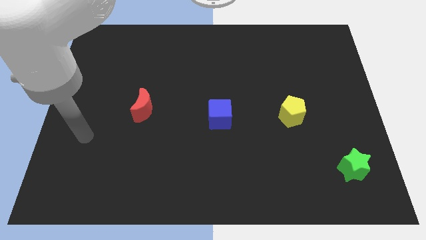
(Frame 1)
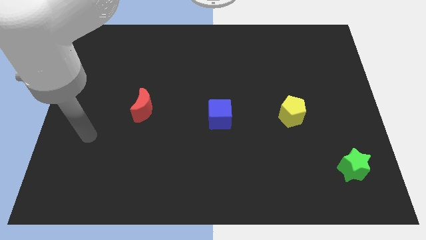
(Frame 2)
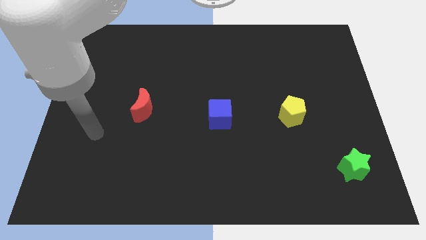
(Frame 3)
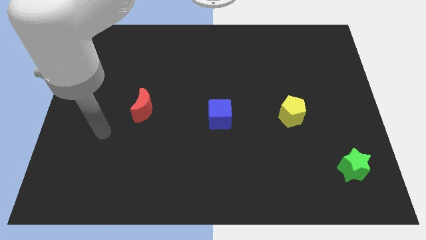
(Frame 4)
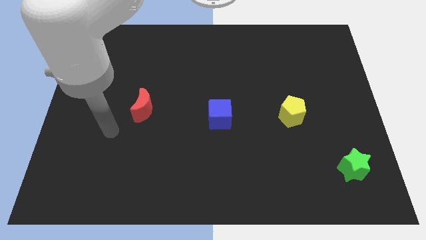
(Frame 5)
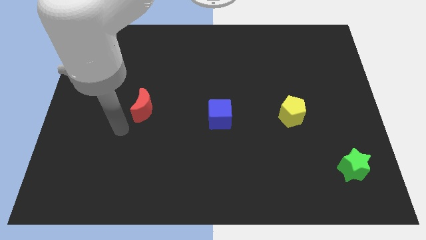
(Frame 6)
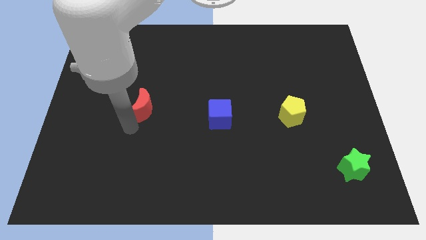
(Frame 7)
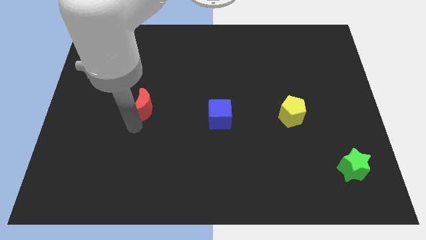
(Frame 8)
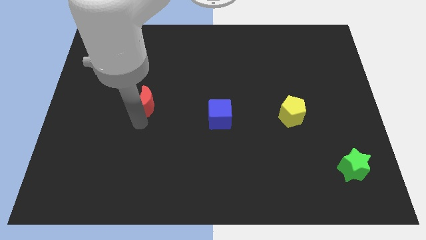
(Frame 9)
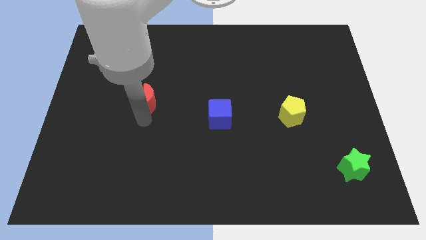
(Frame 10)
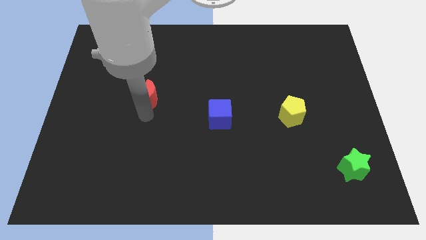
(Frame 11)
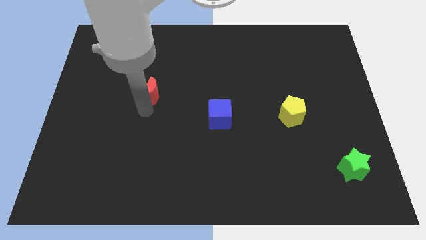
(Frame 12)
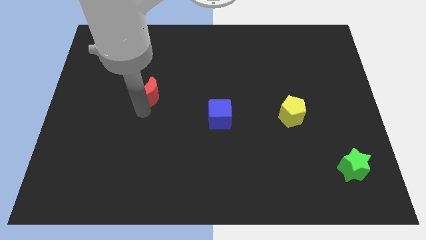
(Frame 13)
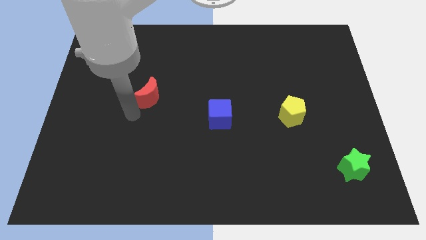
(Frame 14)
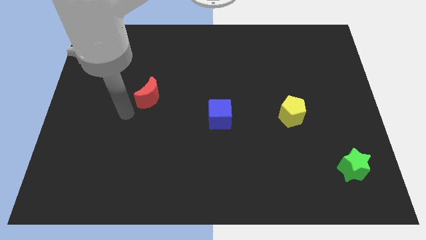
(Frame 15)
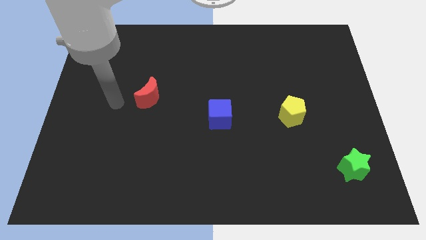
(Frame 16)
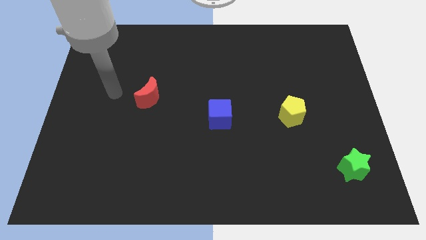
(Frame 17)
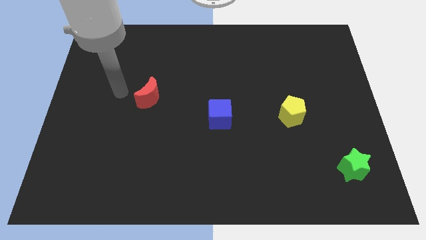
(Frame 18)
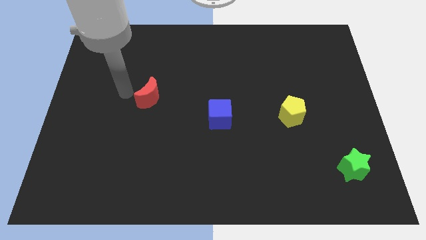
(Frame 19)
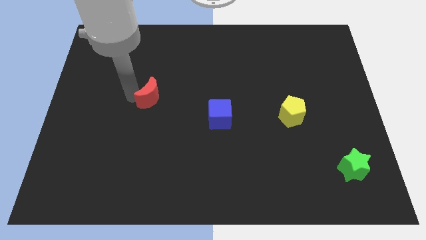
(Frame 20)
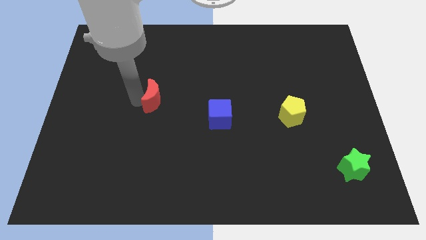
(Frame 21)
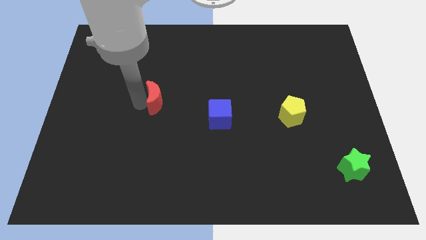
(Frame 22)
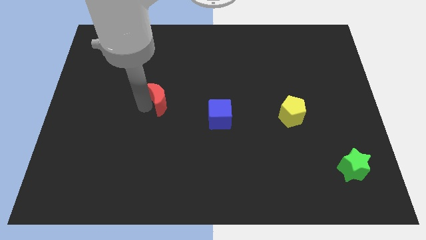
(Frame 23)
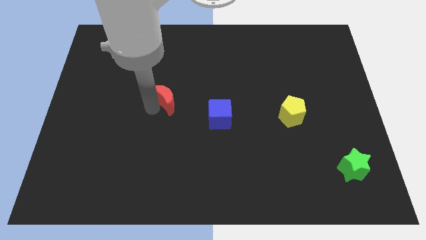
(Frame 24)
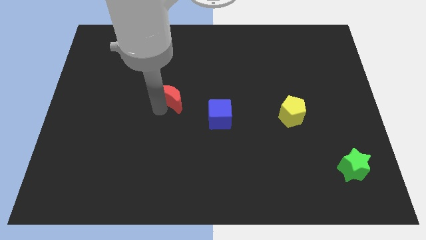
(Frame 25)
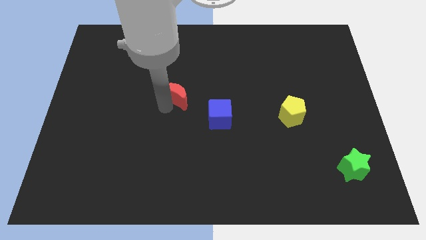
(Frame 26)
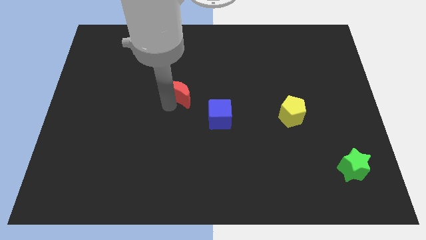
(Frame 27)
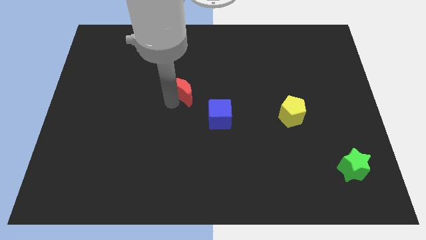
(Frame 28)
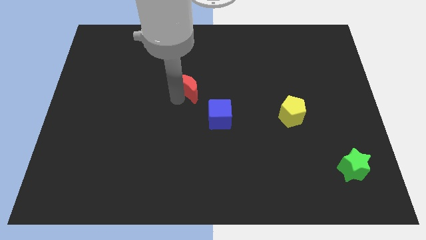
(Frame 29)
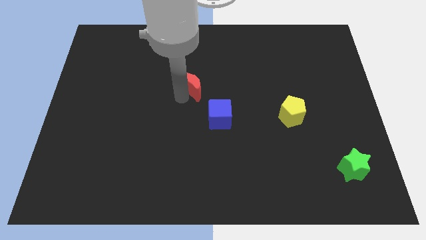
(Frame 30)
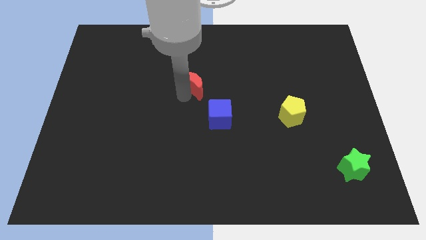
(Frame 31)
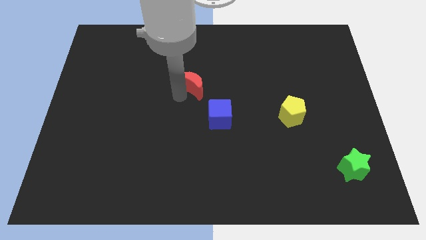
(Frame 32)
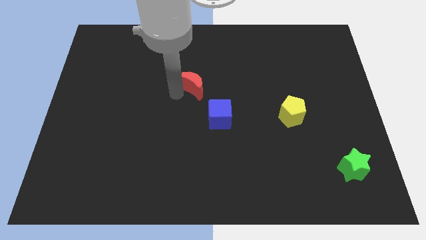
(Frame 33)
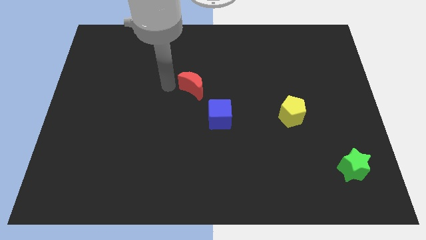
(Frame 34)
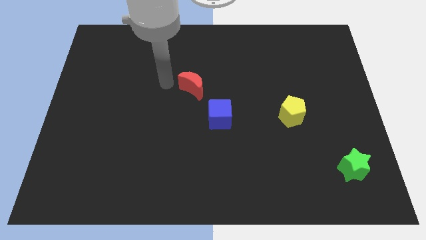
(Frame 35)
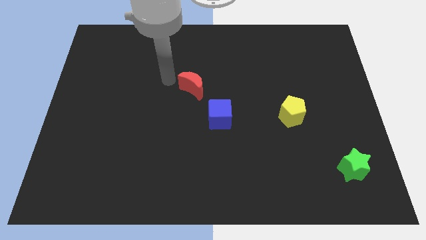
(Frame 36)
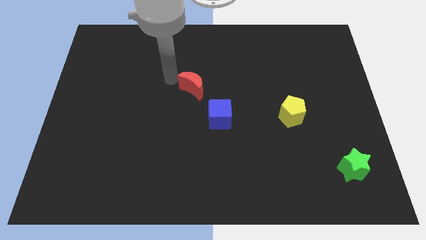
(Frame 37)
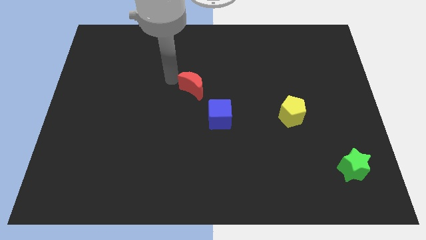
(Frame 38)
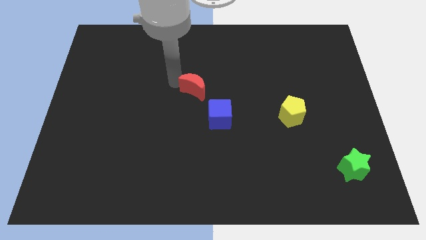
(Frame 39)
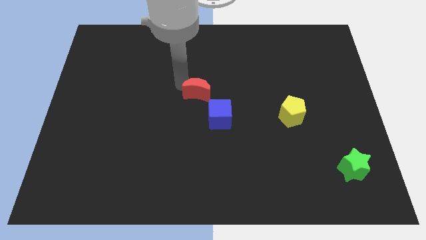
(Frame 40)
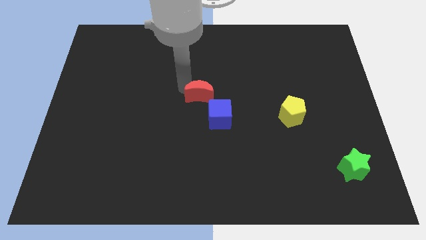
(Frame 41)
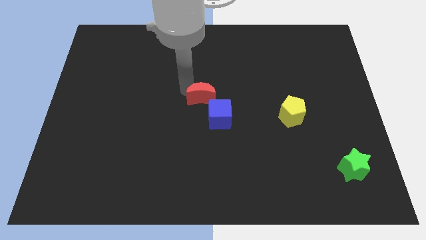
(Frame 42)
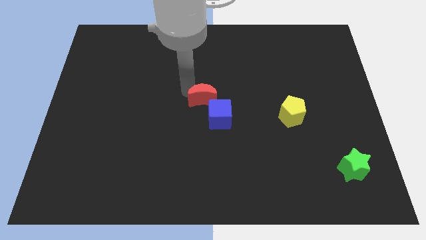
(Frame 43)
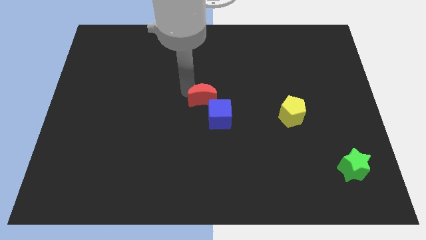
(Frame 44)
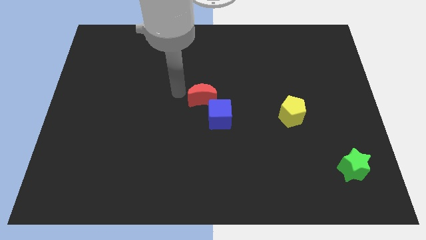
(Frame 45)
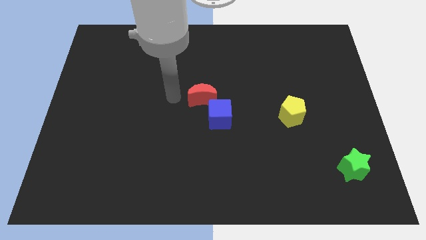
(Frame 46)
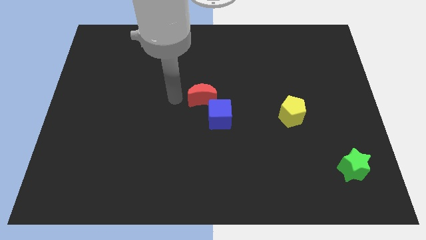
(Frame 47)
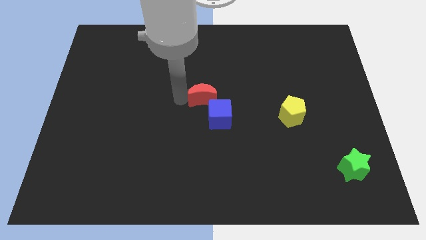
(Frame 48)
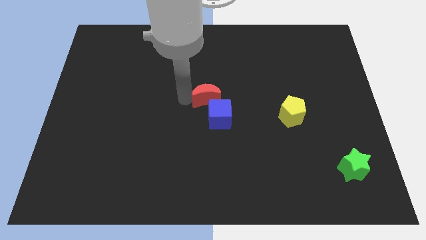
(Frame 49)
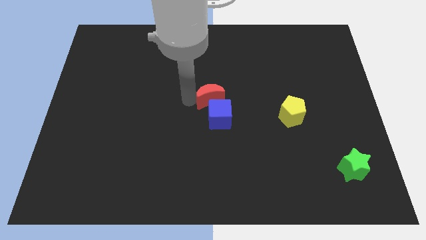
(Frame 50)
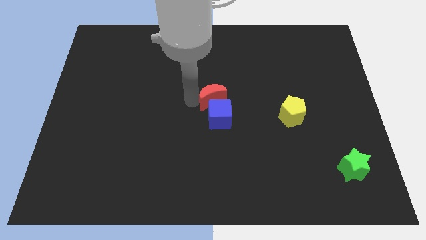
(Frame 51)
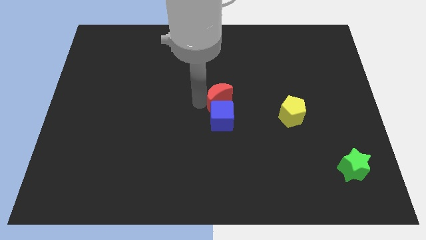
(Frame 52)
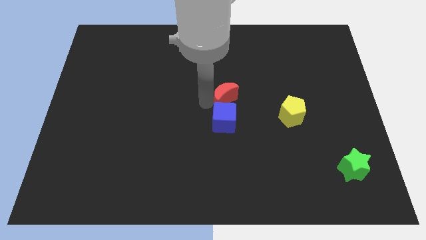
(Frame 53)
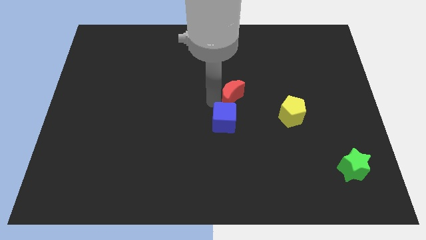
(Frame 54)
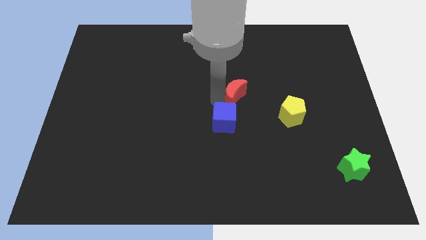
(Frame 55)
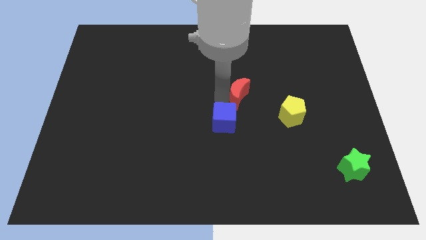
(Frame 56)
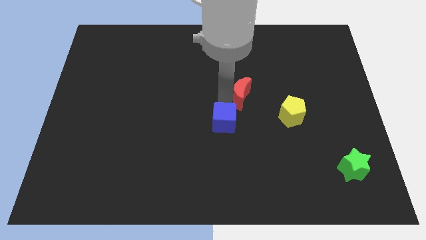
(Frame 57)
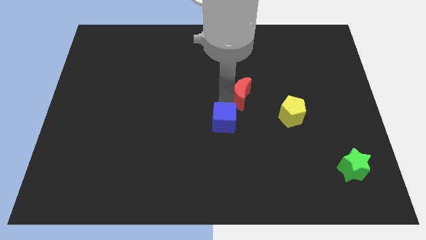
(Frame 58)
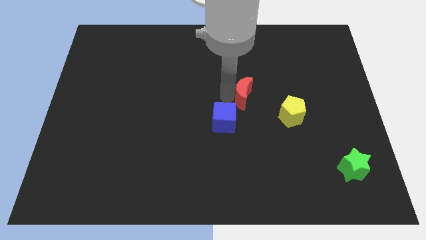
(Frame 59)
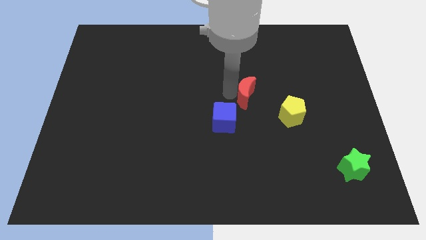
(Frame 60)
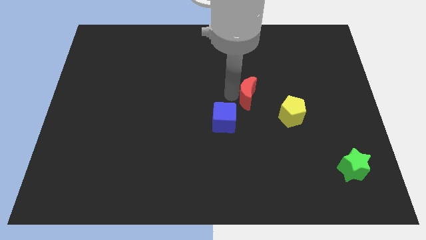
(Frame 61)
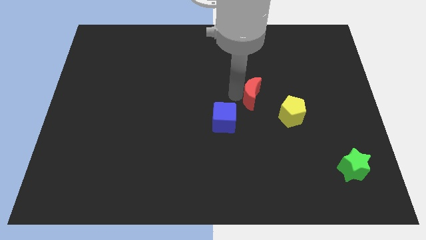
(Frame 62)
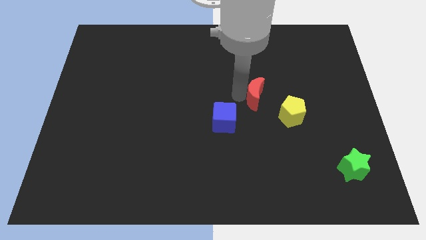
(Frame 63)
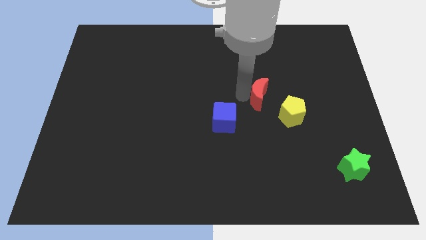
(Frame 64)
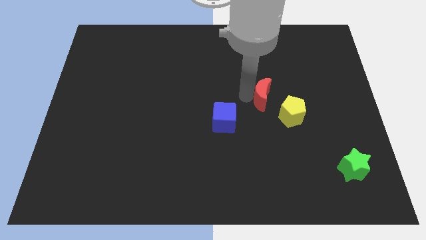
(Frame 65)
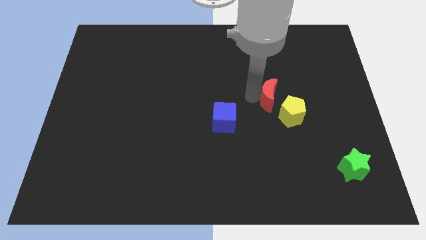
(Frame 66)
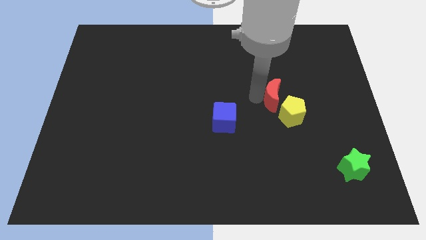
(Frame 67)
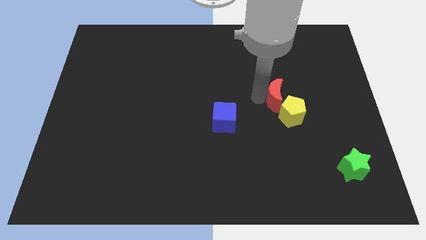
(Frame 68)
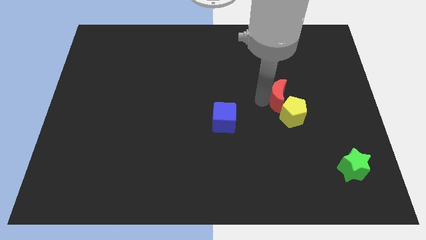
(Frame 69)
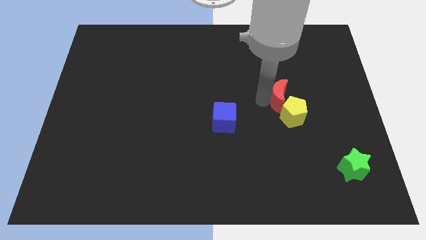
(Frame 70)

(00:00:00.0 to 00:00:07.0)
slide the red block towards the yellow pentagon

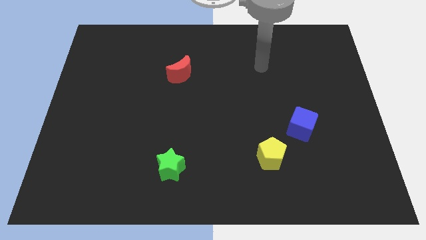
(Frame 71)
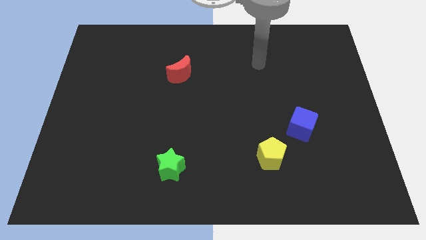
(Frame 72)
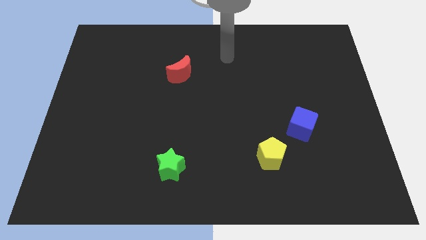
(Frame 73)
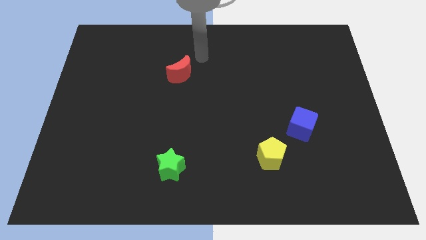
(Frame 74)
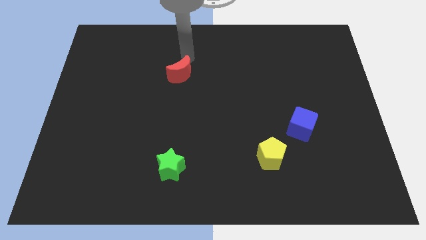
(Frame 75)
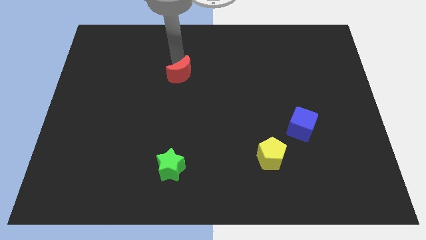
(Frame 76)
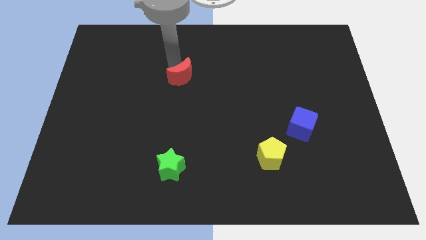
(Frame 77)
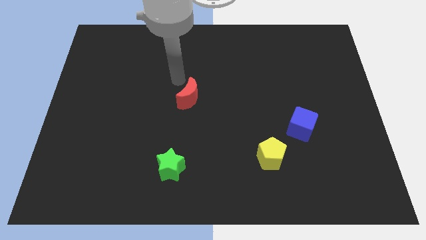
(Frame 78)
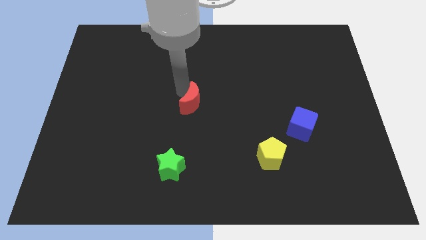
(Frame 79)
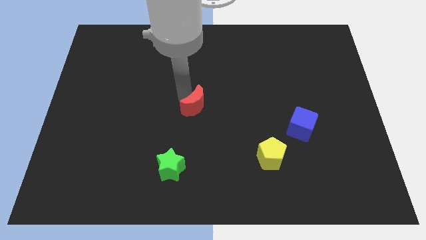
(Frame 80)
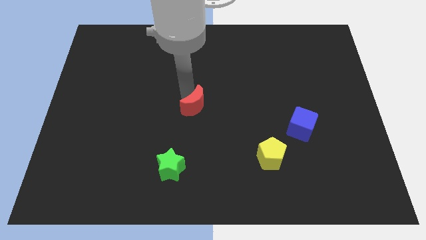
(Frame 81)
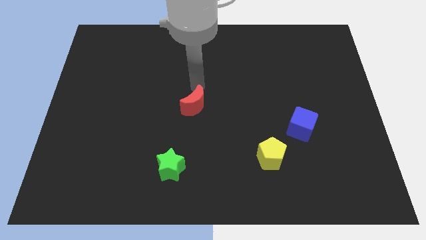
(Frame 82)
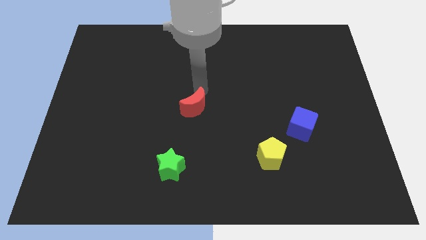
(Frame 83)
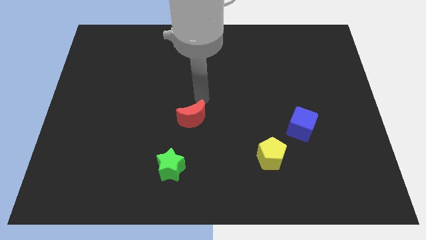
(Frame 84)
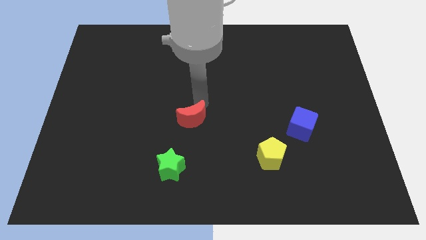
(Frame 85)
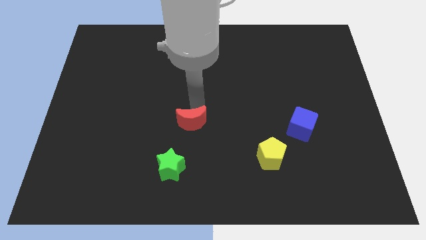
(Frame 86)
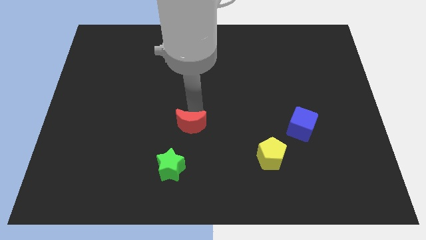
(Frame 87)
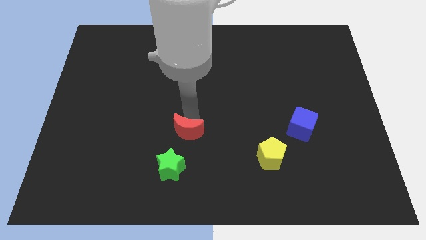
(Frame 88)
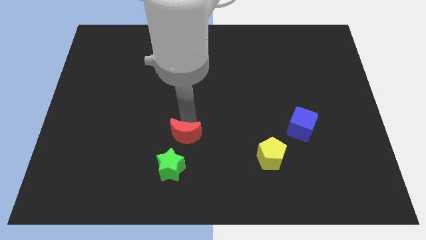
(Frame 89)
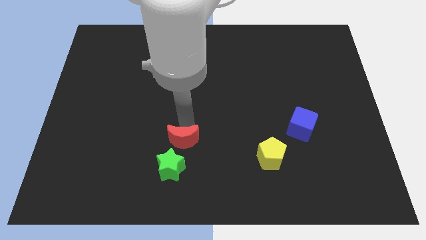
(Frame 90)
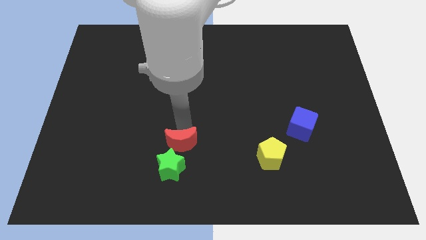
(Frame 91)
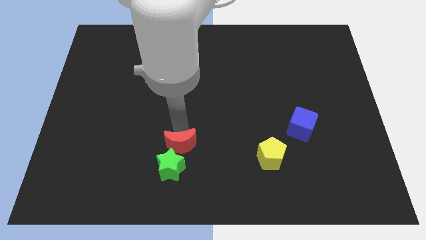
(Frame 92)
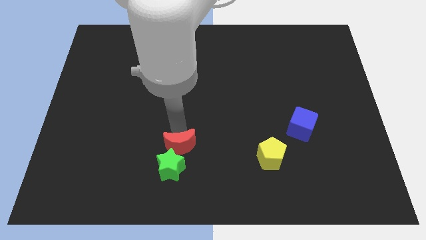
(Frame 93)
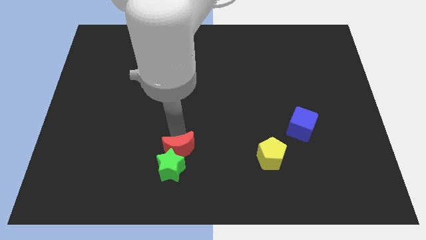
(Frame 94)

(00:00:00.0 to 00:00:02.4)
slide the moon towards the green star
